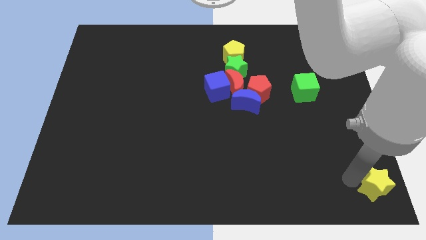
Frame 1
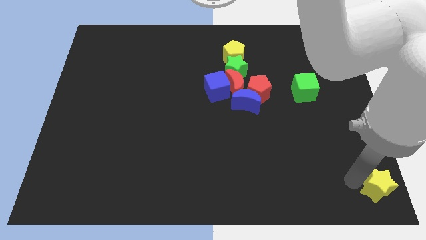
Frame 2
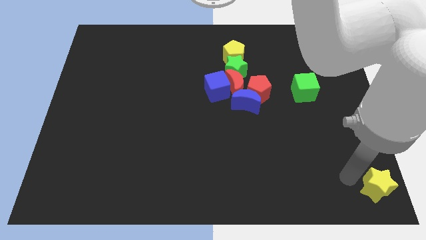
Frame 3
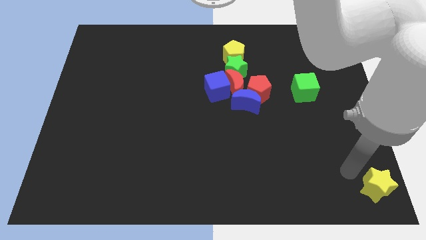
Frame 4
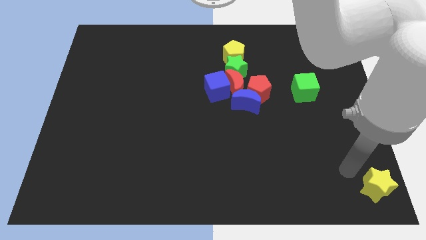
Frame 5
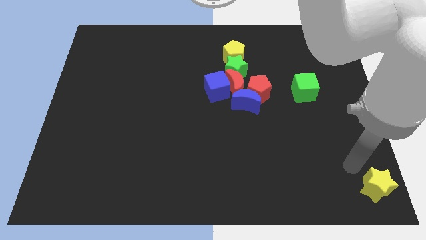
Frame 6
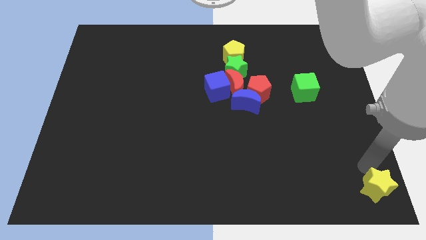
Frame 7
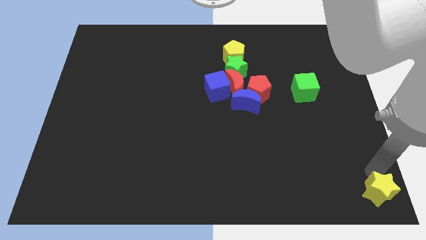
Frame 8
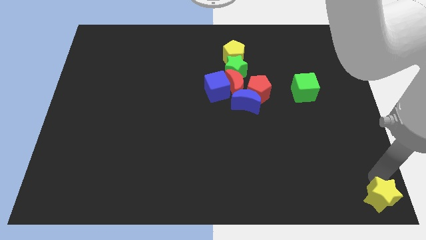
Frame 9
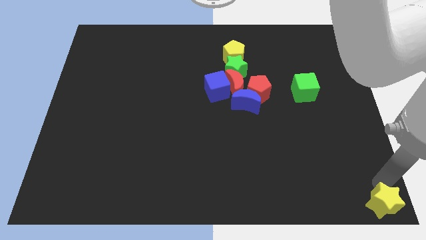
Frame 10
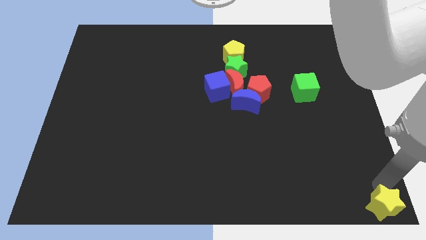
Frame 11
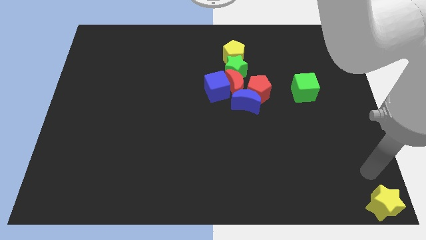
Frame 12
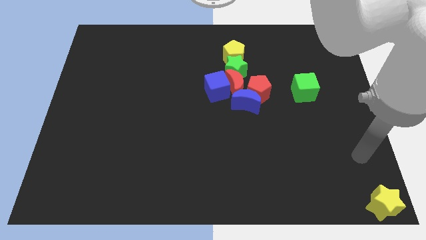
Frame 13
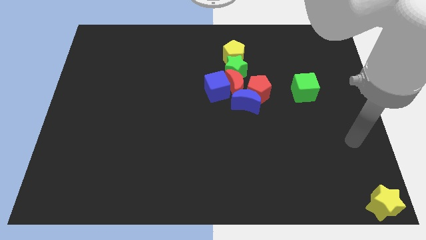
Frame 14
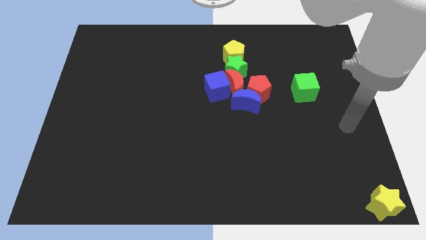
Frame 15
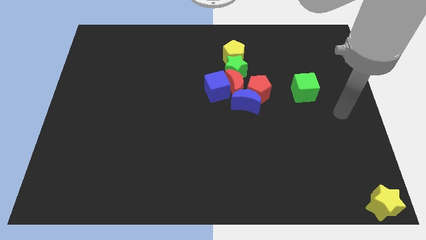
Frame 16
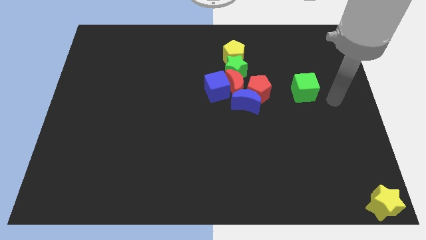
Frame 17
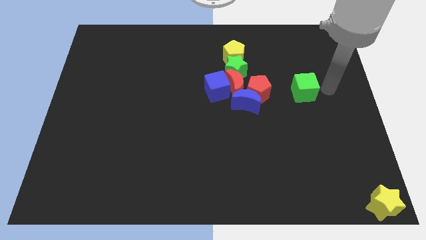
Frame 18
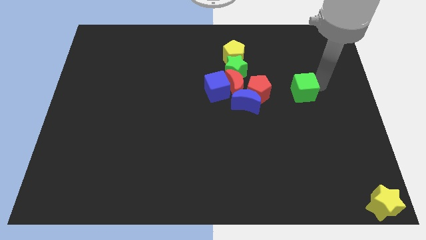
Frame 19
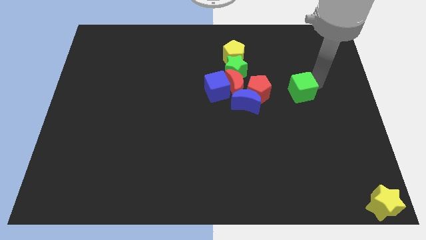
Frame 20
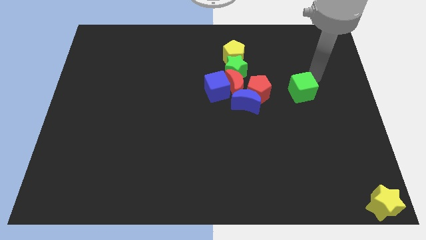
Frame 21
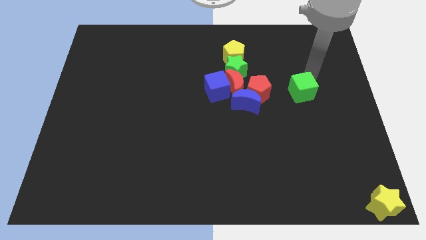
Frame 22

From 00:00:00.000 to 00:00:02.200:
move the yellow star to the right bottom corner

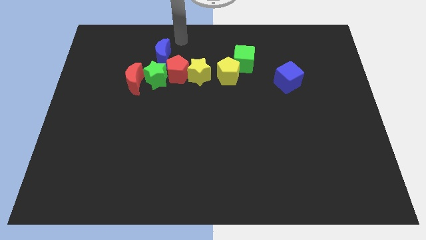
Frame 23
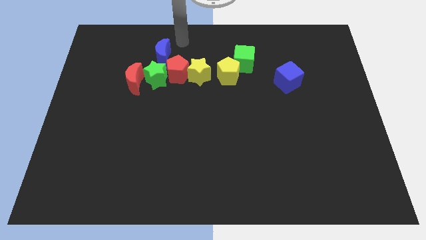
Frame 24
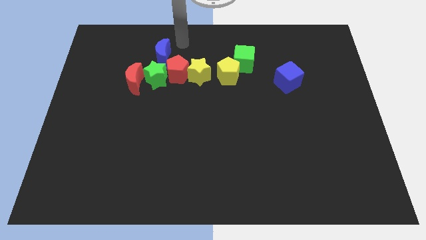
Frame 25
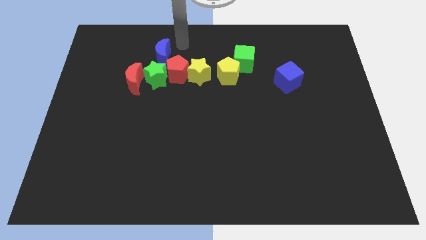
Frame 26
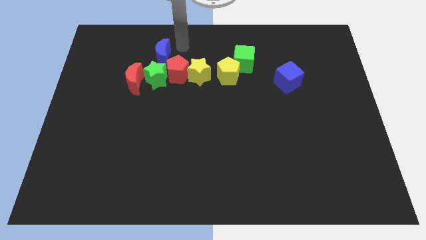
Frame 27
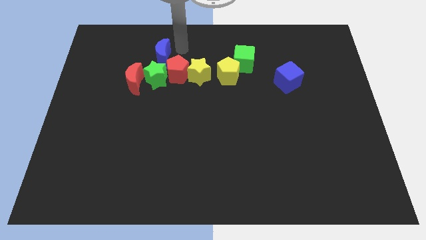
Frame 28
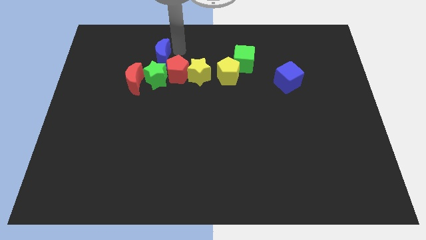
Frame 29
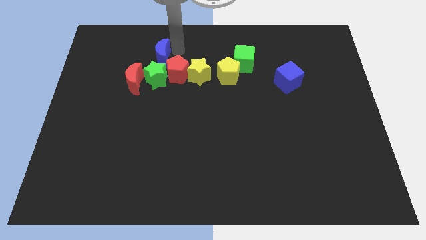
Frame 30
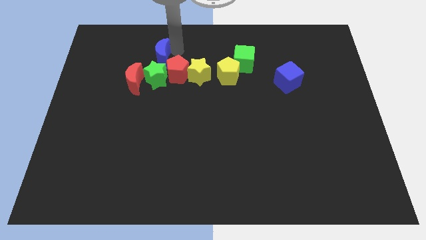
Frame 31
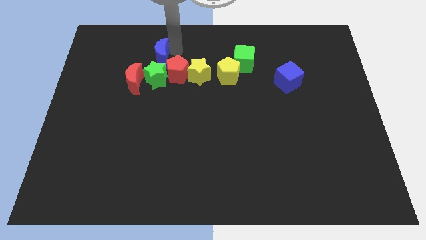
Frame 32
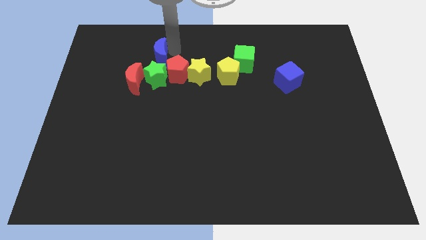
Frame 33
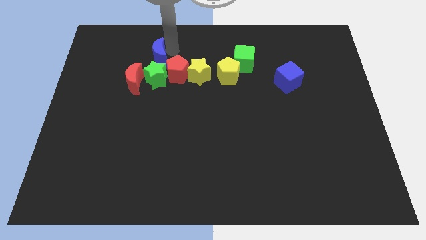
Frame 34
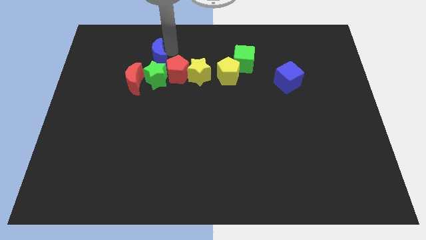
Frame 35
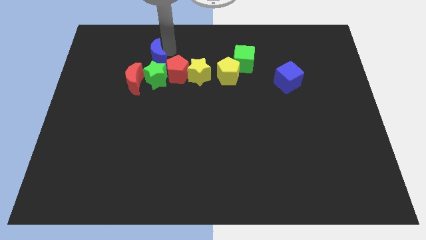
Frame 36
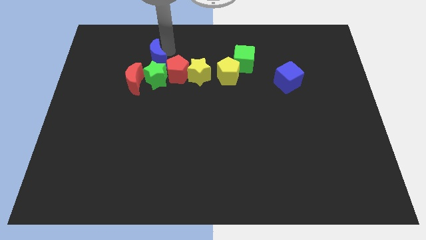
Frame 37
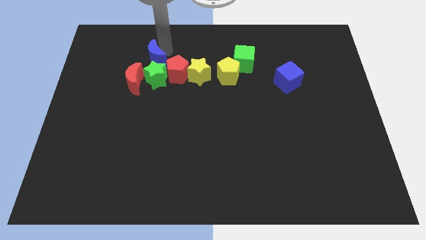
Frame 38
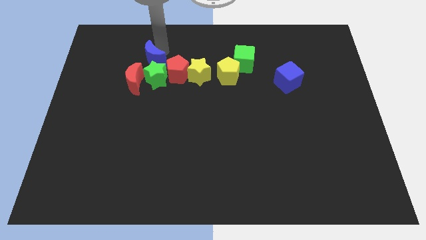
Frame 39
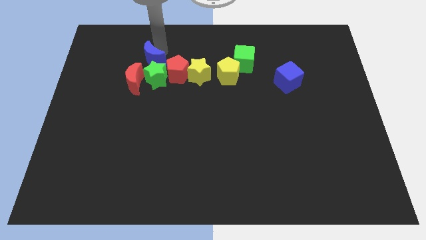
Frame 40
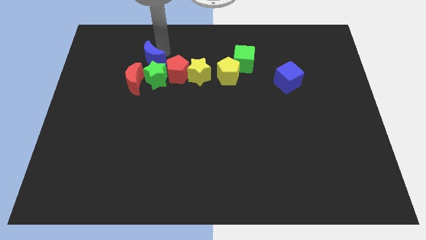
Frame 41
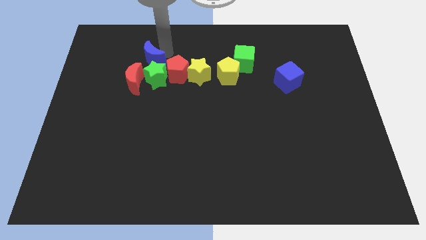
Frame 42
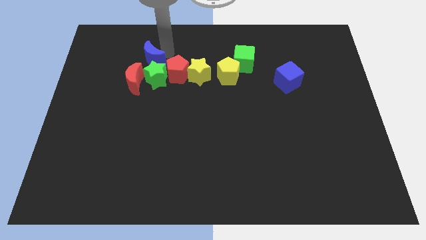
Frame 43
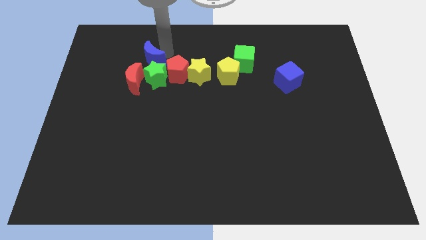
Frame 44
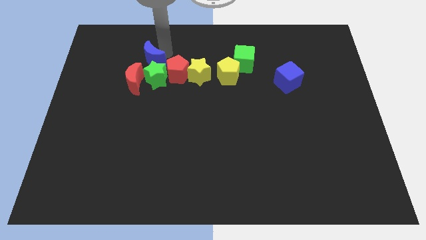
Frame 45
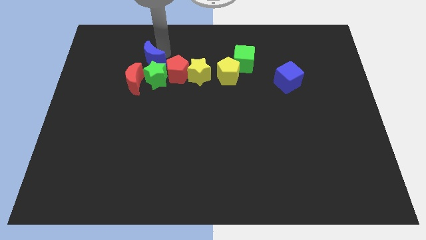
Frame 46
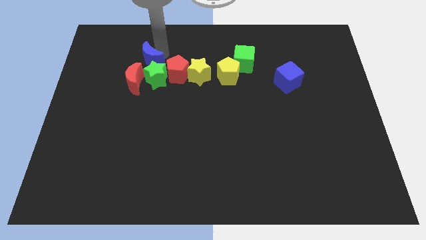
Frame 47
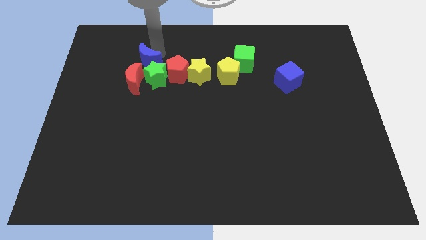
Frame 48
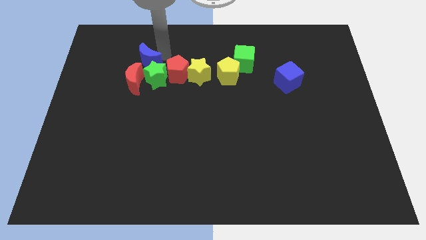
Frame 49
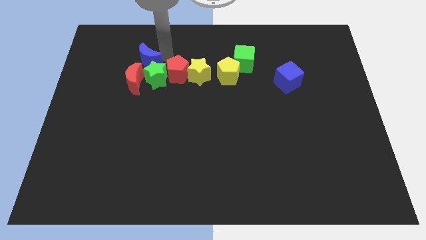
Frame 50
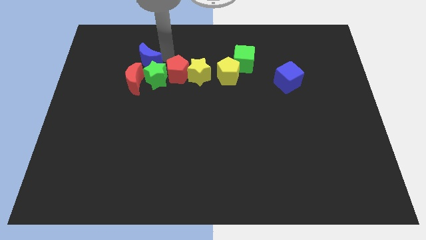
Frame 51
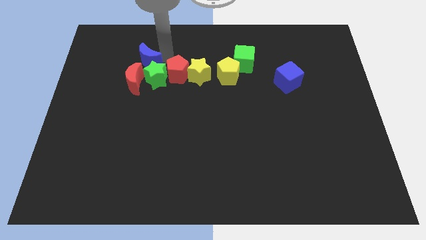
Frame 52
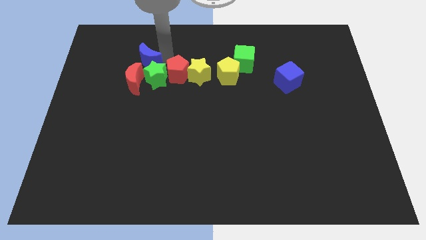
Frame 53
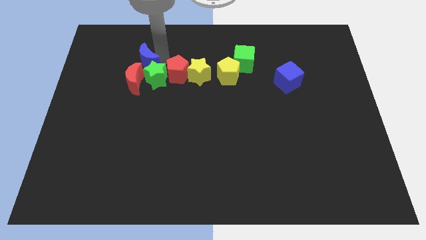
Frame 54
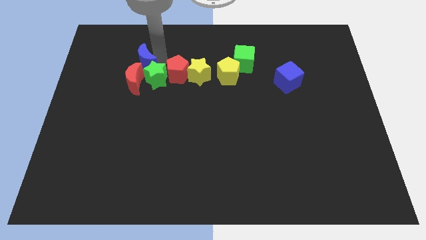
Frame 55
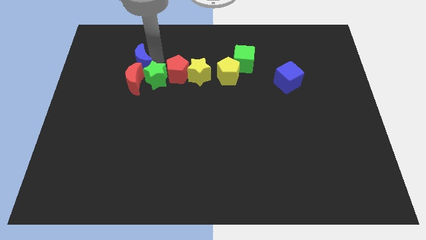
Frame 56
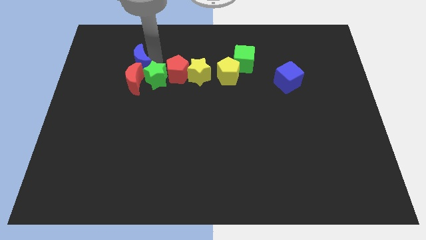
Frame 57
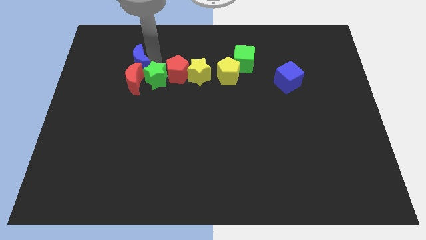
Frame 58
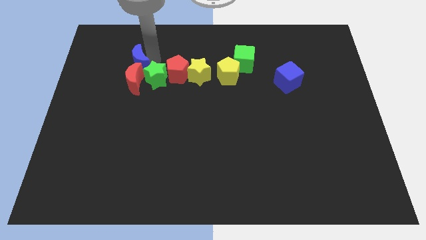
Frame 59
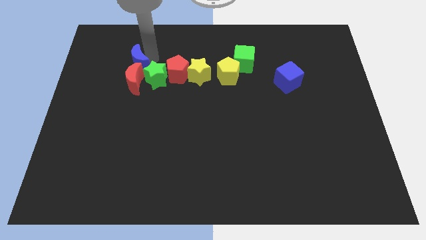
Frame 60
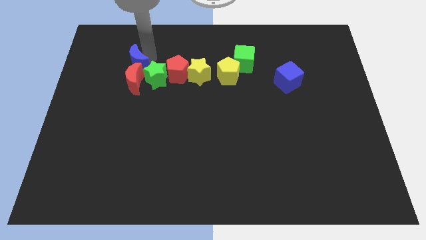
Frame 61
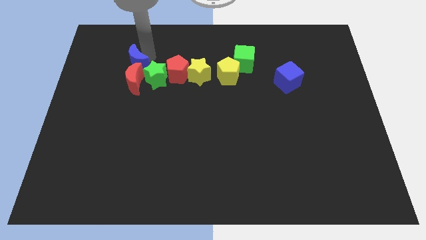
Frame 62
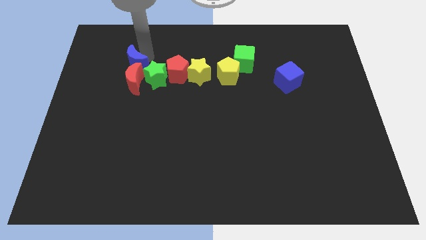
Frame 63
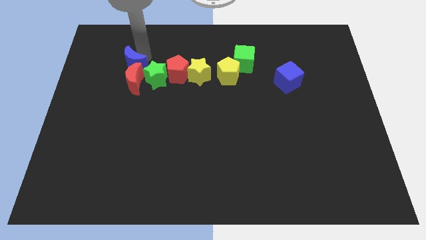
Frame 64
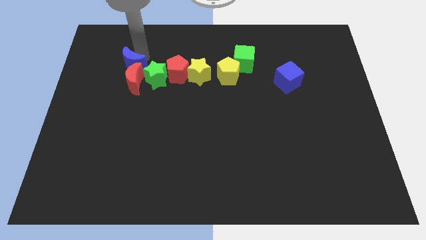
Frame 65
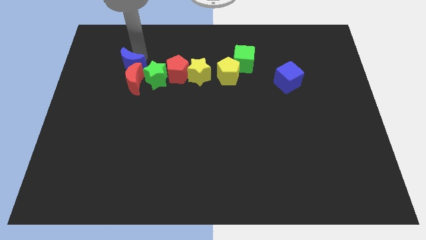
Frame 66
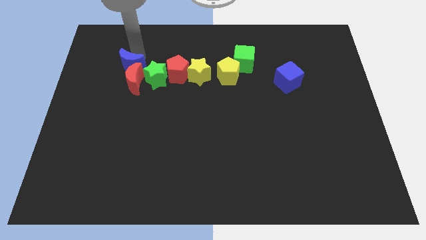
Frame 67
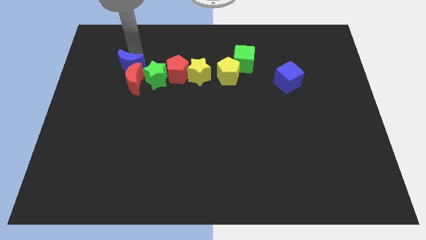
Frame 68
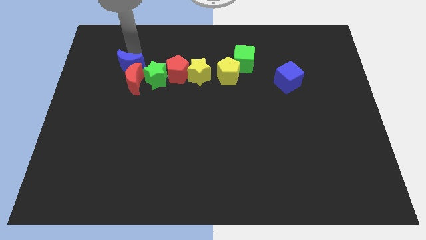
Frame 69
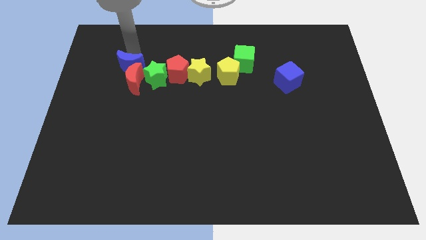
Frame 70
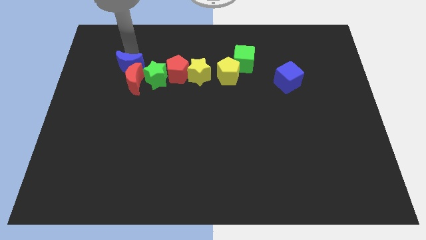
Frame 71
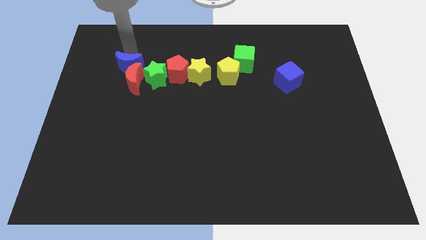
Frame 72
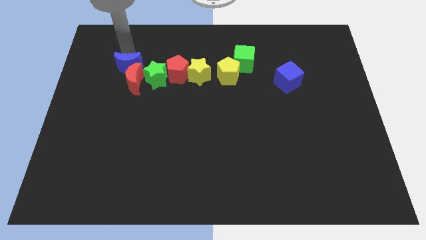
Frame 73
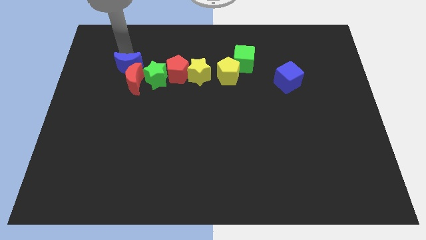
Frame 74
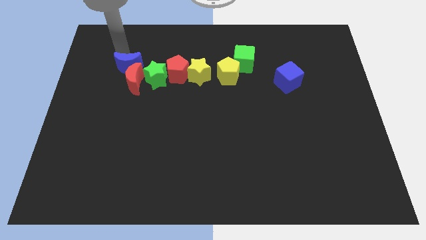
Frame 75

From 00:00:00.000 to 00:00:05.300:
move the blue moon to the top left side of the red moon

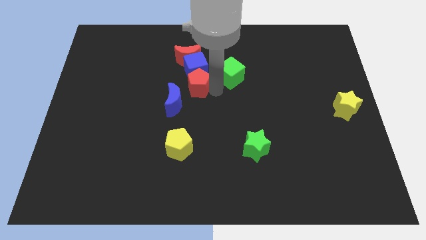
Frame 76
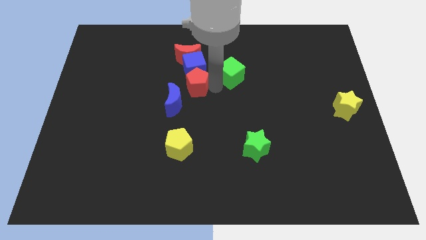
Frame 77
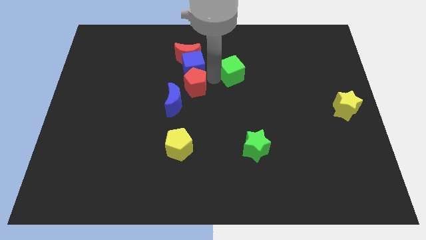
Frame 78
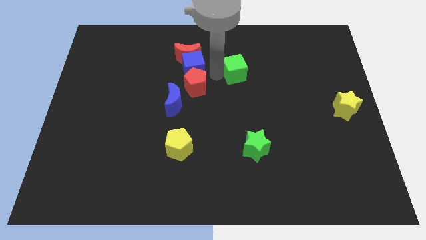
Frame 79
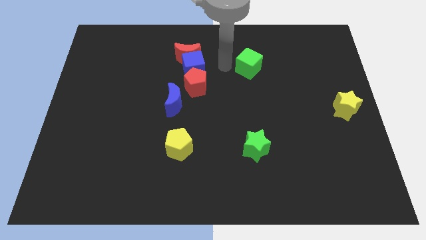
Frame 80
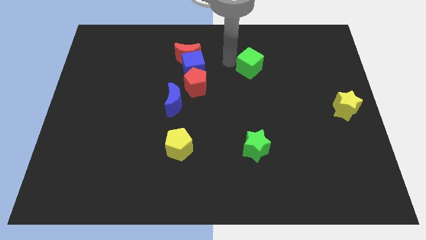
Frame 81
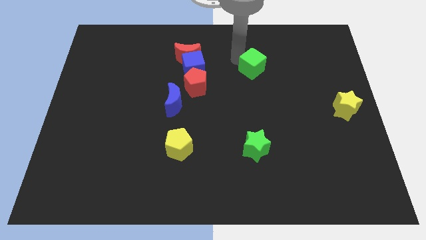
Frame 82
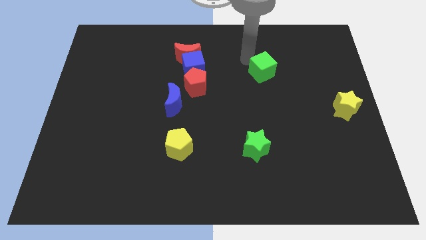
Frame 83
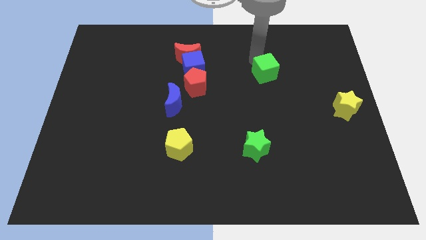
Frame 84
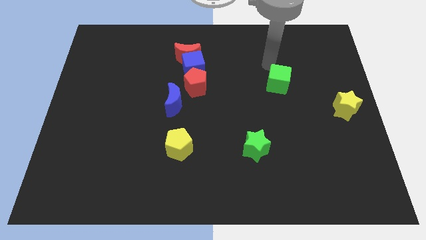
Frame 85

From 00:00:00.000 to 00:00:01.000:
separate the green cube from the group of blocks

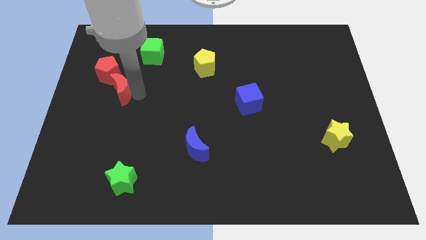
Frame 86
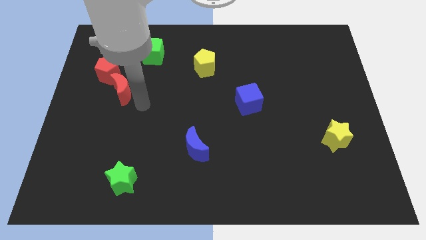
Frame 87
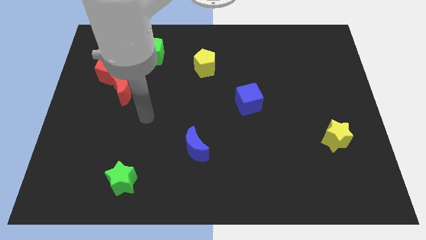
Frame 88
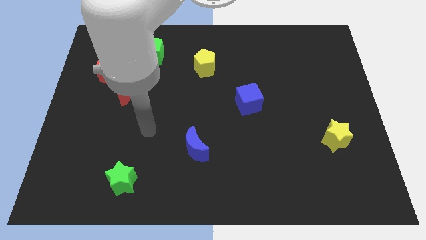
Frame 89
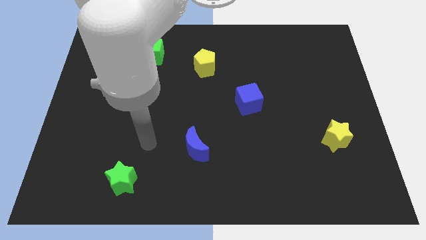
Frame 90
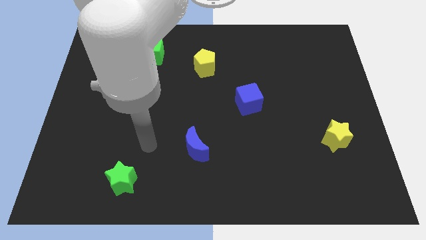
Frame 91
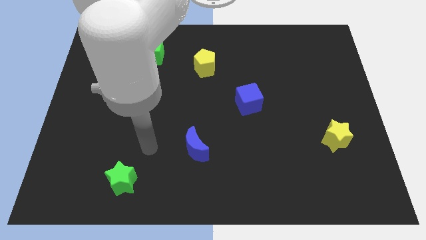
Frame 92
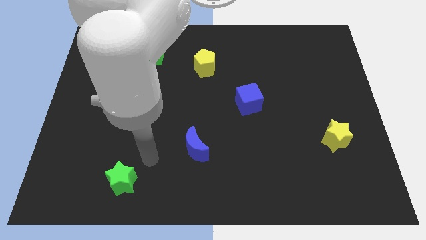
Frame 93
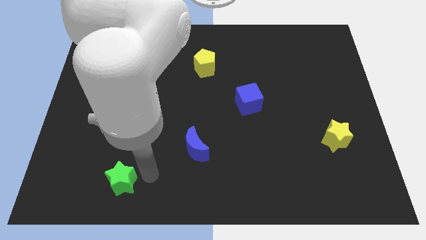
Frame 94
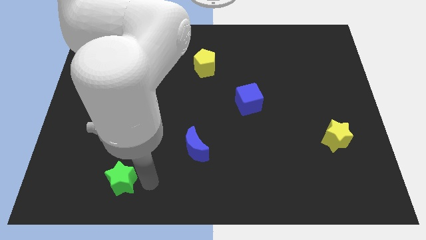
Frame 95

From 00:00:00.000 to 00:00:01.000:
move your arm away from red moon
